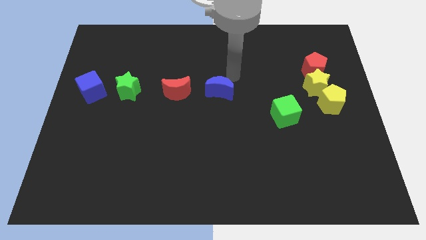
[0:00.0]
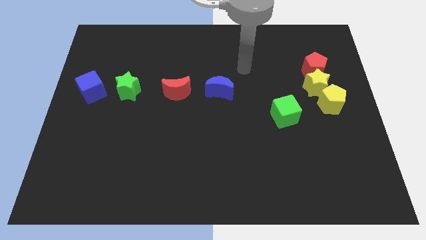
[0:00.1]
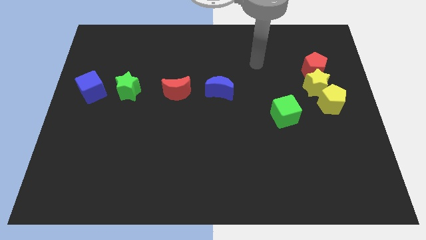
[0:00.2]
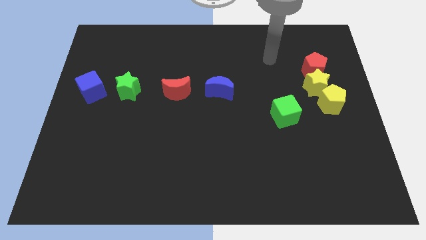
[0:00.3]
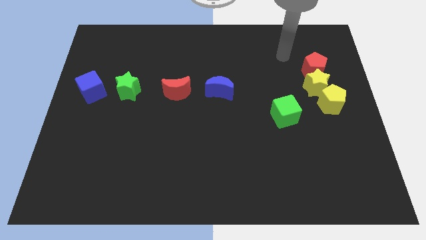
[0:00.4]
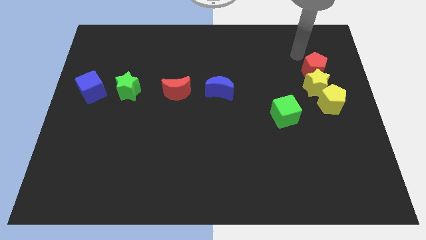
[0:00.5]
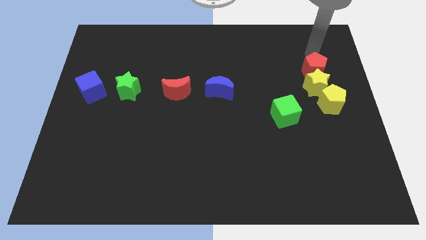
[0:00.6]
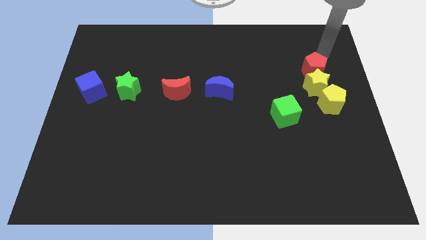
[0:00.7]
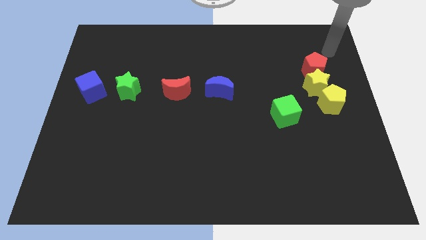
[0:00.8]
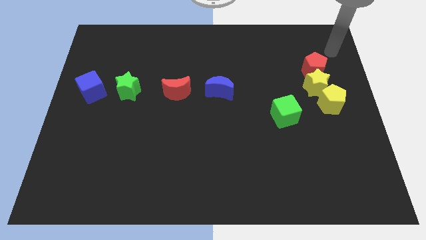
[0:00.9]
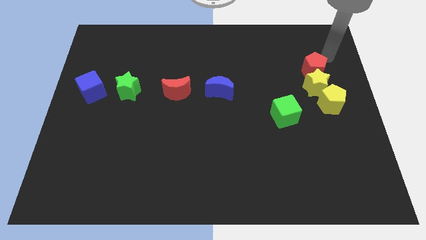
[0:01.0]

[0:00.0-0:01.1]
place your arm on top of the red pentagon

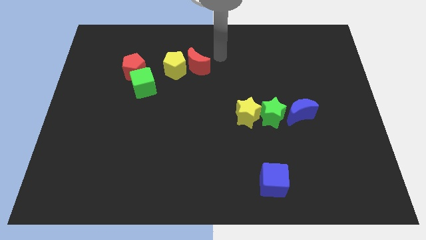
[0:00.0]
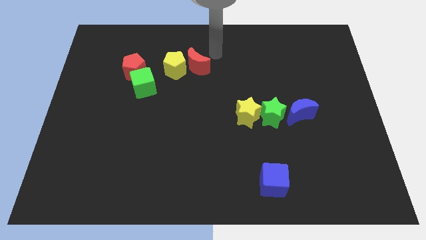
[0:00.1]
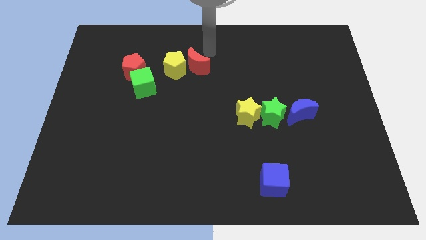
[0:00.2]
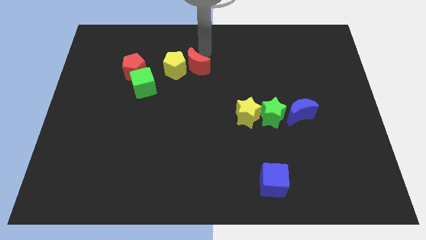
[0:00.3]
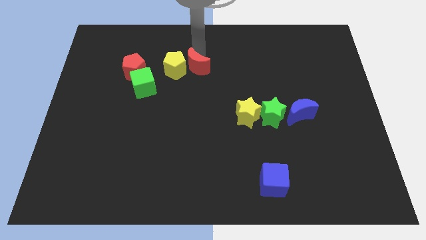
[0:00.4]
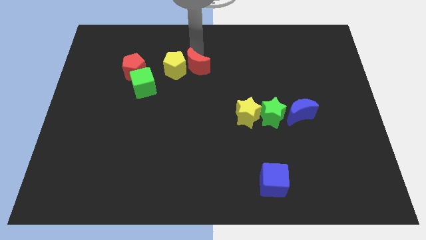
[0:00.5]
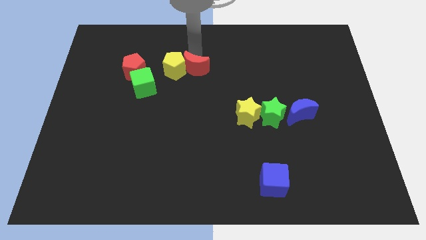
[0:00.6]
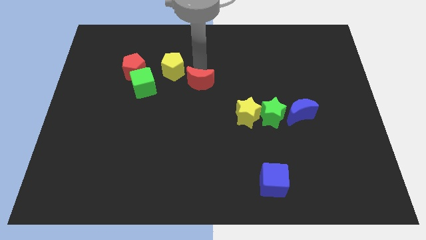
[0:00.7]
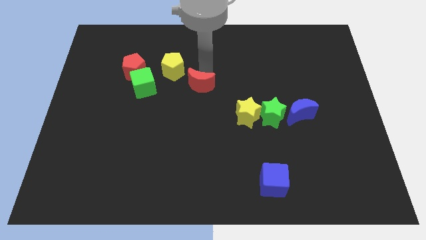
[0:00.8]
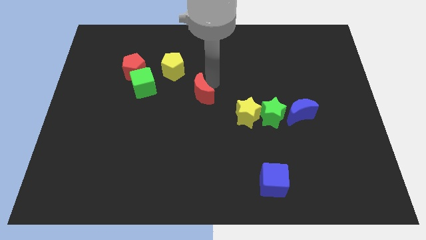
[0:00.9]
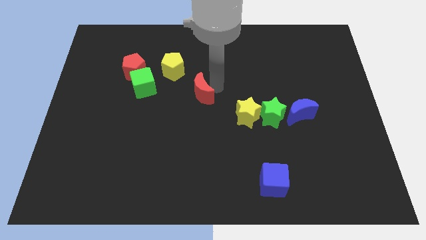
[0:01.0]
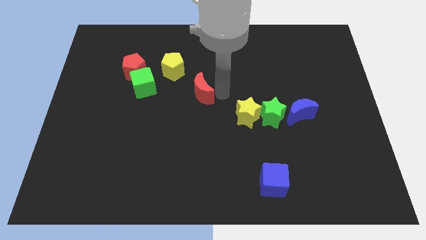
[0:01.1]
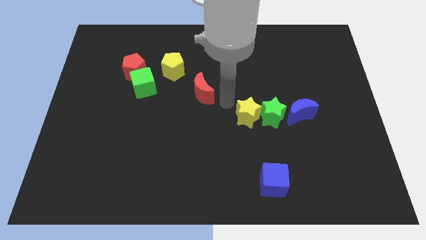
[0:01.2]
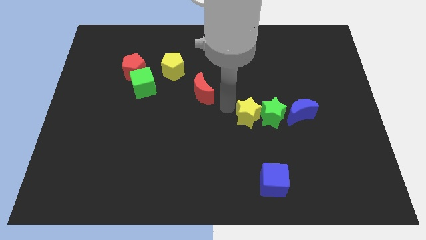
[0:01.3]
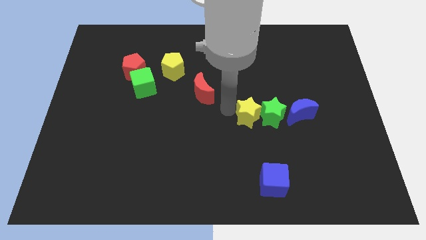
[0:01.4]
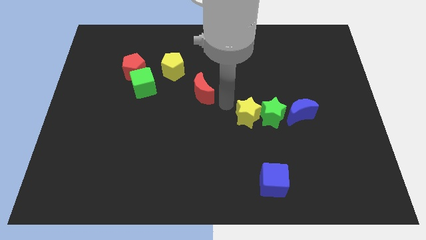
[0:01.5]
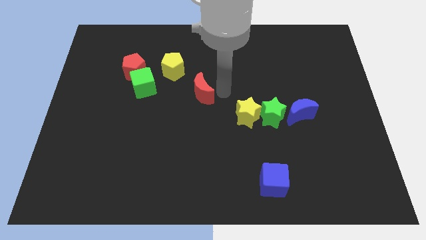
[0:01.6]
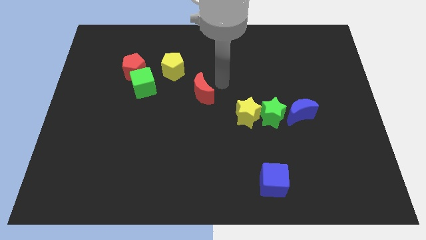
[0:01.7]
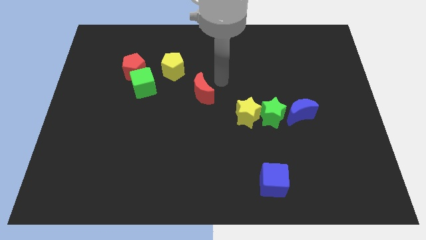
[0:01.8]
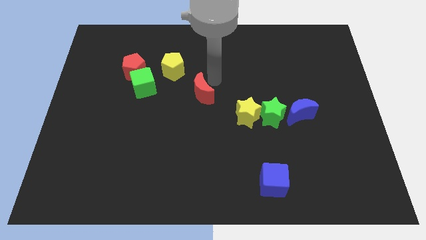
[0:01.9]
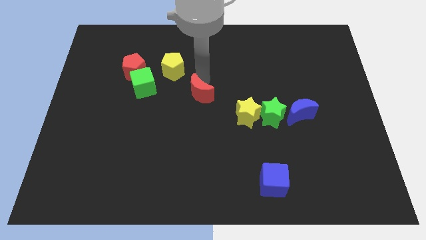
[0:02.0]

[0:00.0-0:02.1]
place the red crescent in between yellow star and pentagon

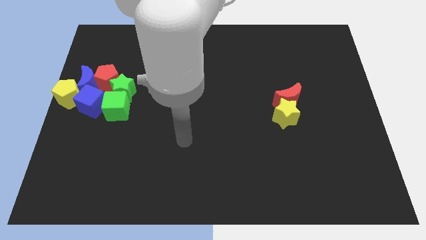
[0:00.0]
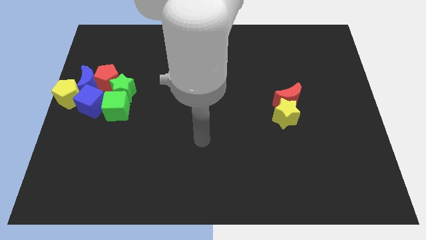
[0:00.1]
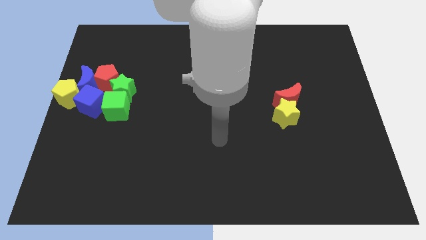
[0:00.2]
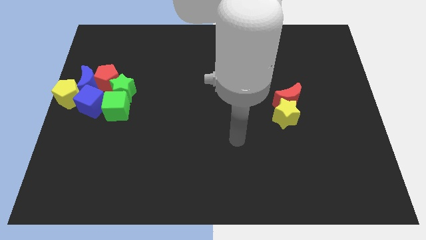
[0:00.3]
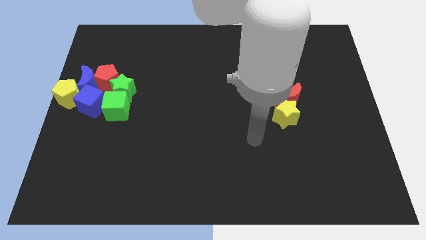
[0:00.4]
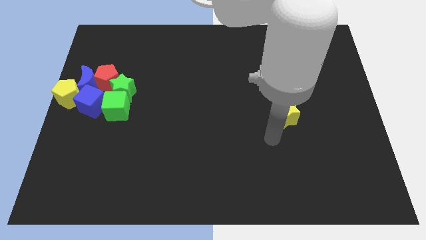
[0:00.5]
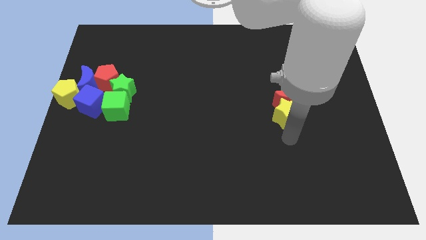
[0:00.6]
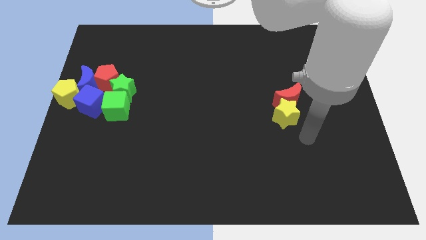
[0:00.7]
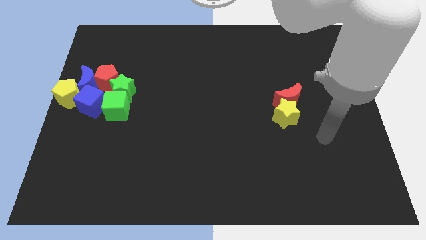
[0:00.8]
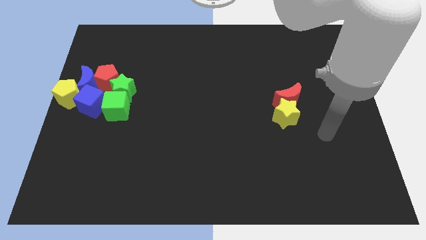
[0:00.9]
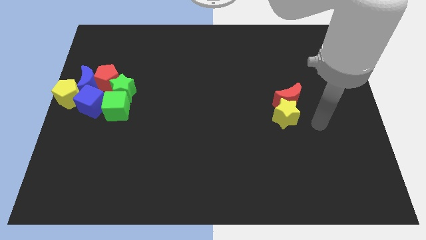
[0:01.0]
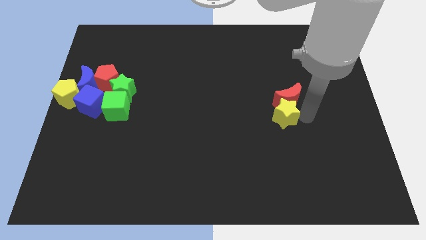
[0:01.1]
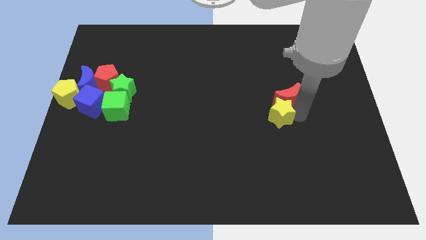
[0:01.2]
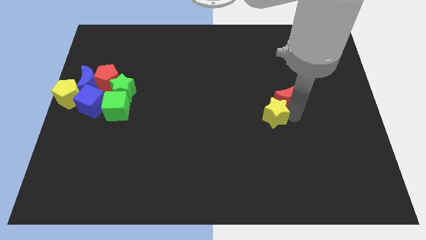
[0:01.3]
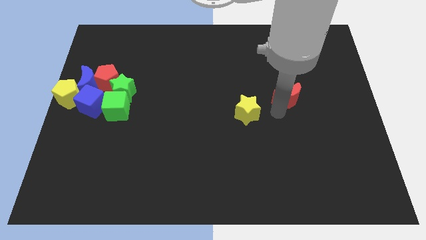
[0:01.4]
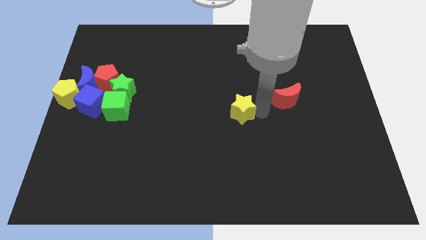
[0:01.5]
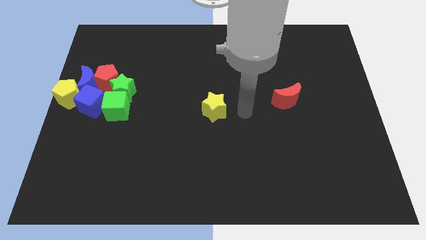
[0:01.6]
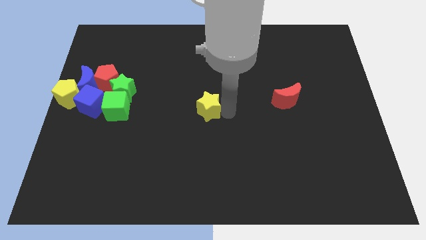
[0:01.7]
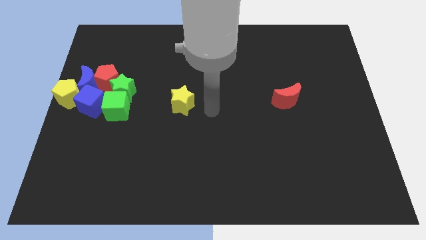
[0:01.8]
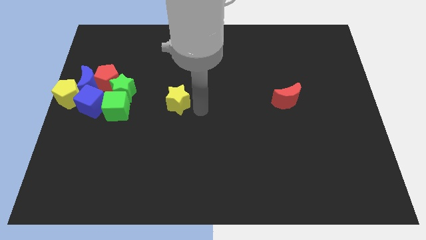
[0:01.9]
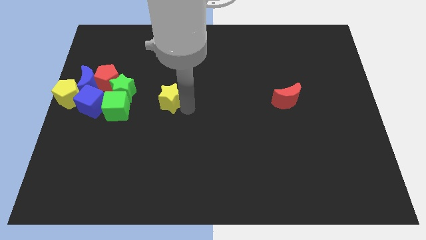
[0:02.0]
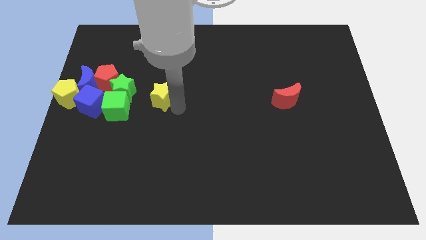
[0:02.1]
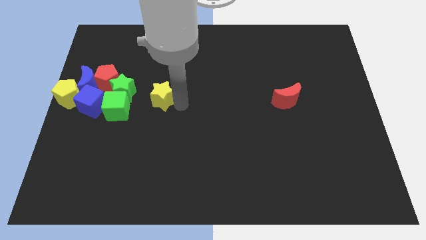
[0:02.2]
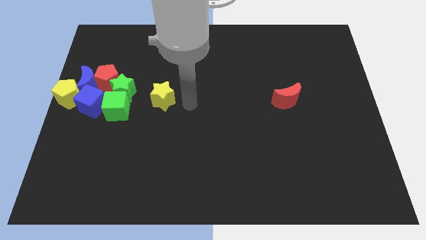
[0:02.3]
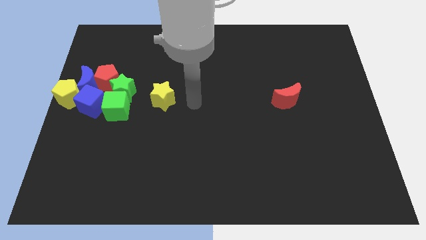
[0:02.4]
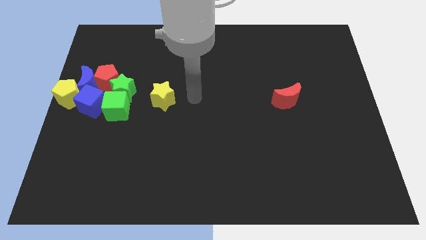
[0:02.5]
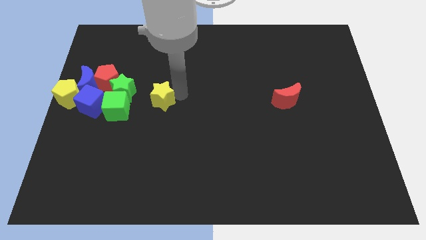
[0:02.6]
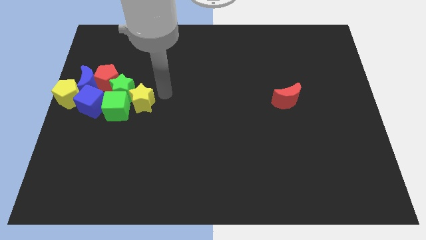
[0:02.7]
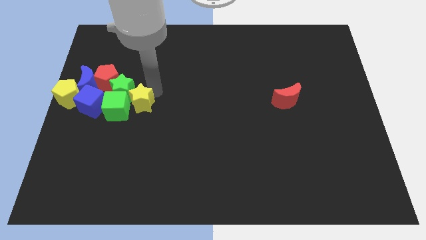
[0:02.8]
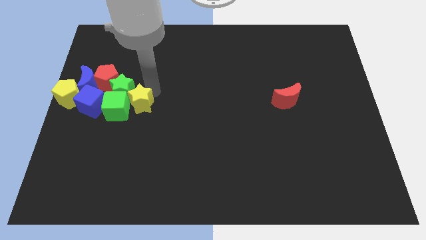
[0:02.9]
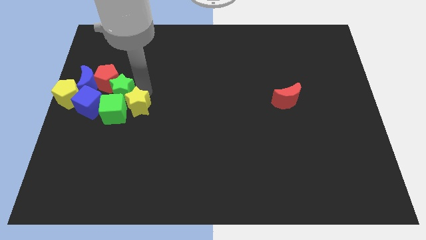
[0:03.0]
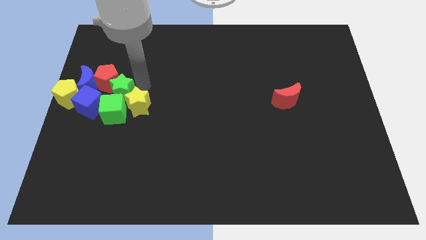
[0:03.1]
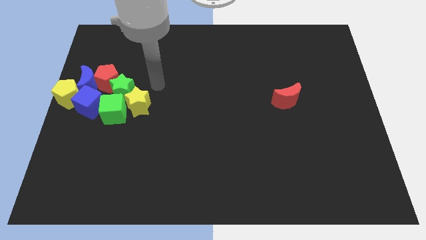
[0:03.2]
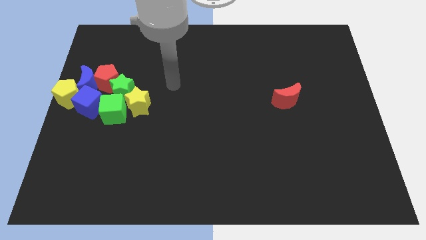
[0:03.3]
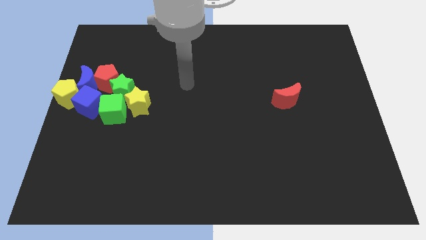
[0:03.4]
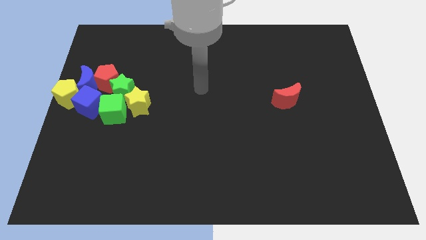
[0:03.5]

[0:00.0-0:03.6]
push the yellow star away from the red crescent

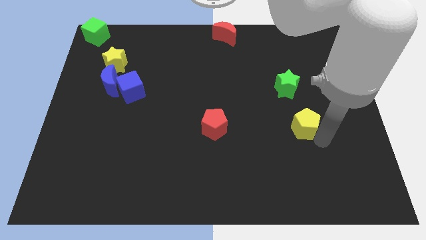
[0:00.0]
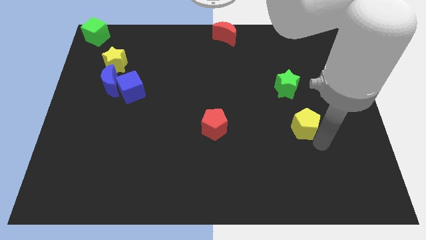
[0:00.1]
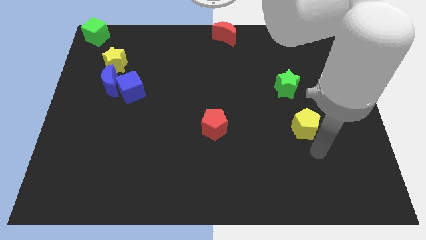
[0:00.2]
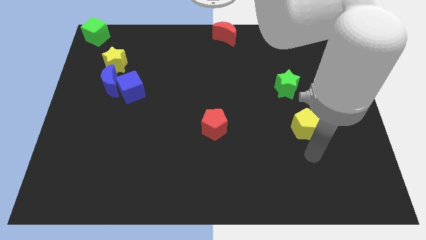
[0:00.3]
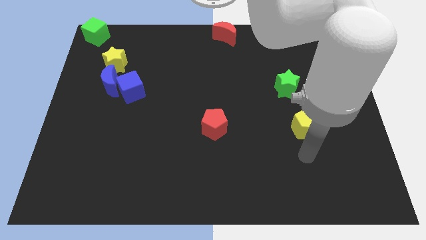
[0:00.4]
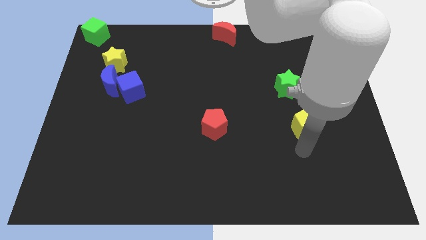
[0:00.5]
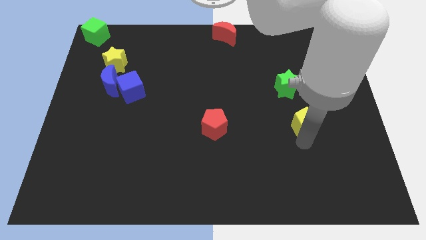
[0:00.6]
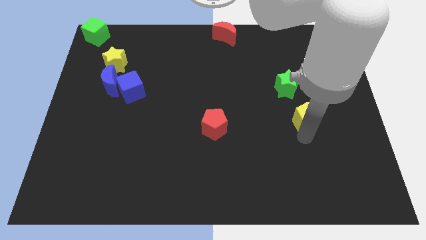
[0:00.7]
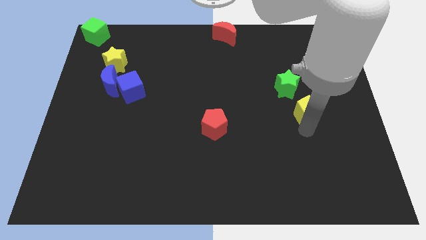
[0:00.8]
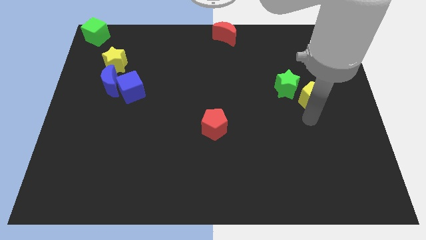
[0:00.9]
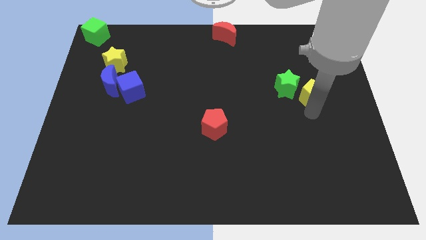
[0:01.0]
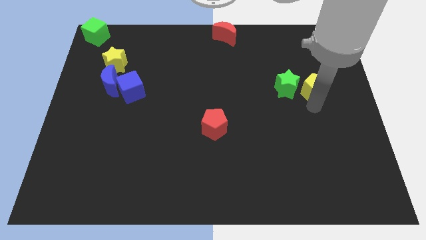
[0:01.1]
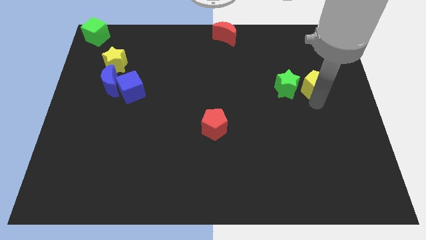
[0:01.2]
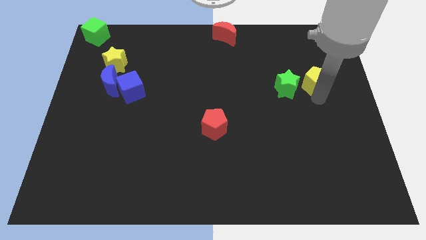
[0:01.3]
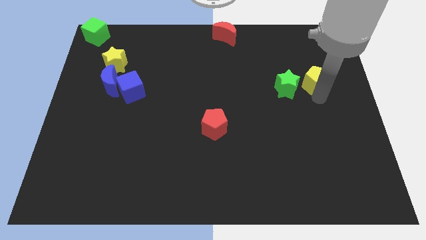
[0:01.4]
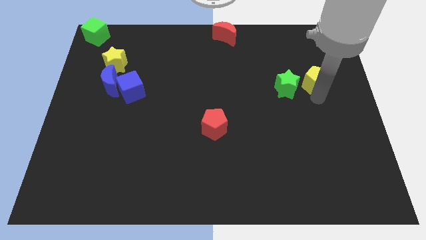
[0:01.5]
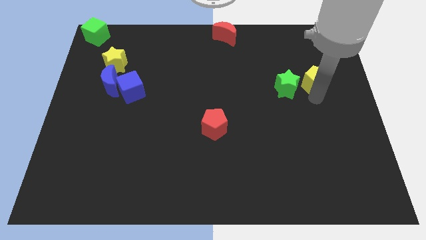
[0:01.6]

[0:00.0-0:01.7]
place the yellow pentagon right to the green star

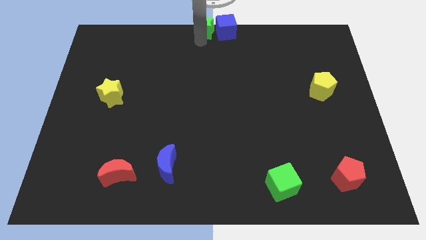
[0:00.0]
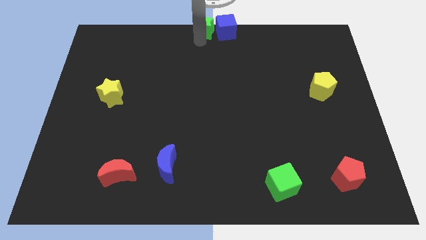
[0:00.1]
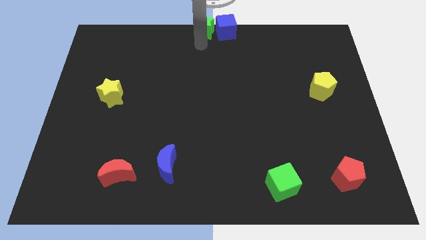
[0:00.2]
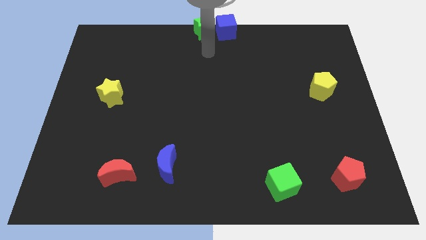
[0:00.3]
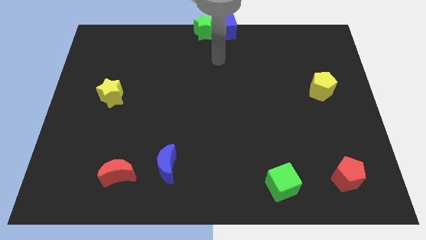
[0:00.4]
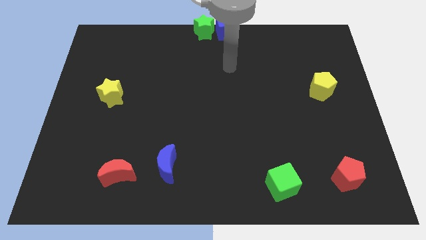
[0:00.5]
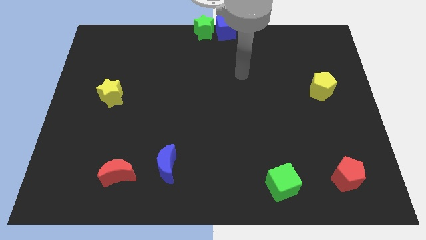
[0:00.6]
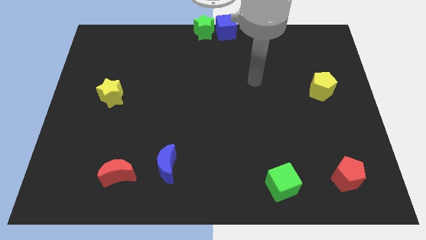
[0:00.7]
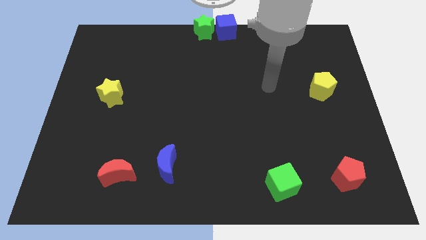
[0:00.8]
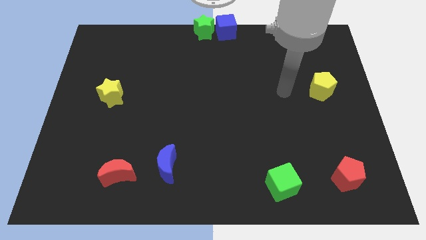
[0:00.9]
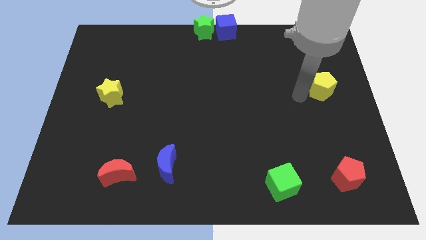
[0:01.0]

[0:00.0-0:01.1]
move your arm away from the green star
